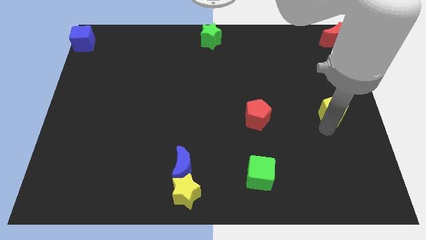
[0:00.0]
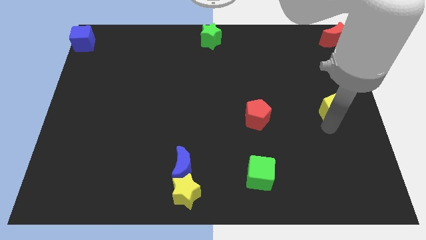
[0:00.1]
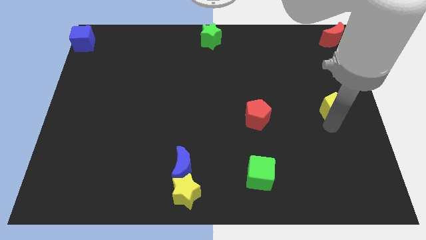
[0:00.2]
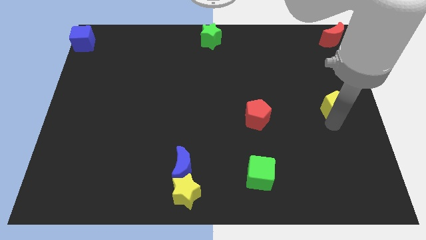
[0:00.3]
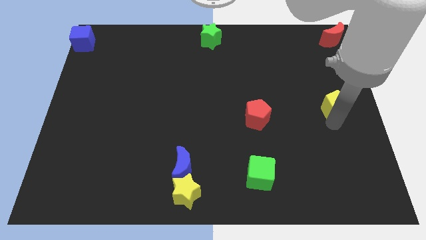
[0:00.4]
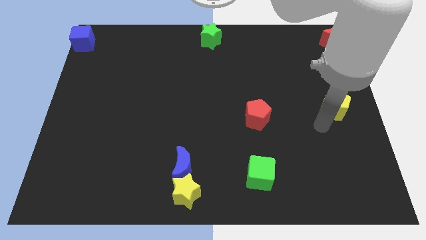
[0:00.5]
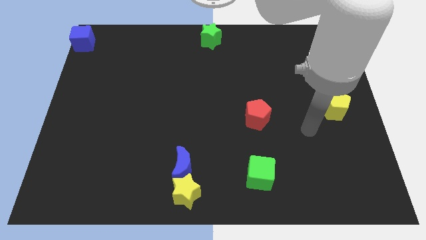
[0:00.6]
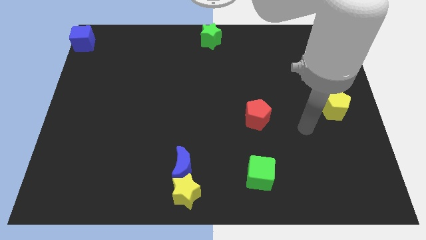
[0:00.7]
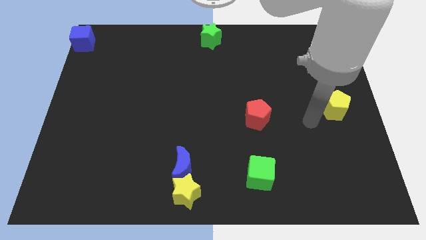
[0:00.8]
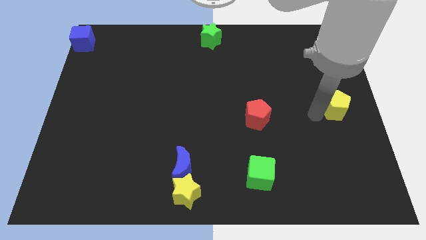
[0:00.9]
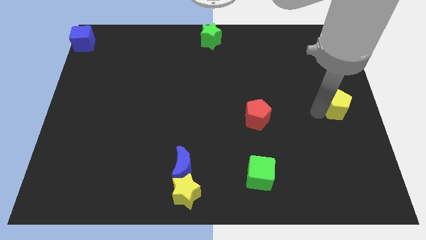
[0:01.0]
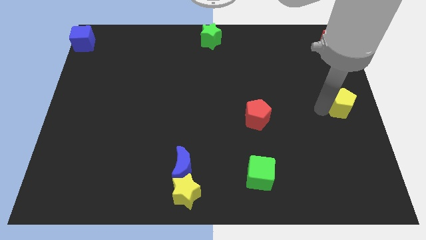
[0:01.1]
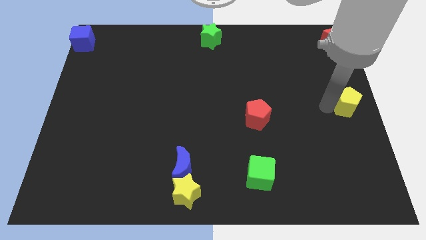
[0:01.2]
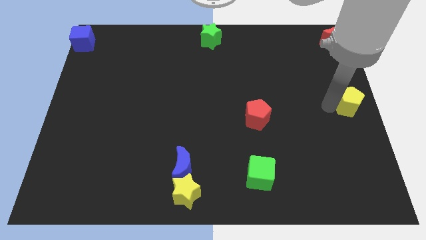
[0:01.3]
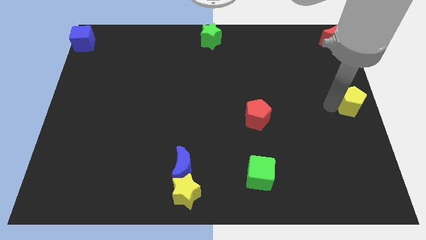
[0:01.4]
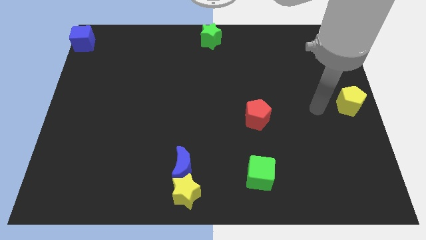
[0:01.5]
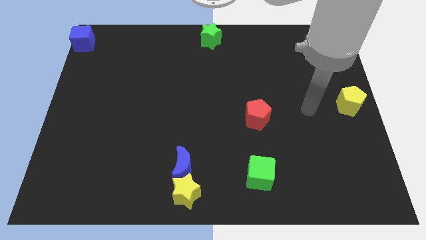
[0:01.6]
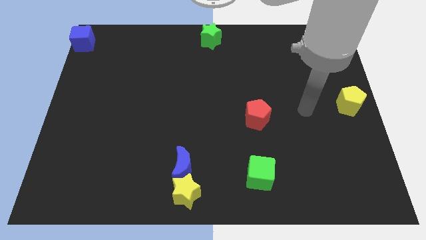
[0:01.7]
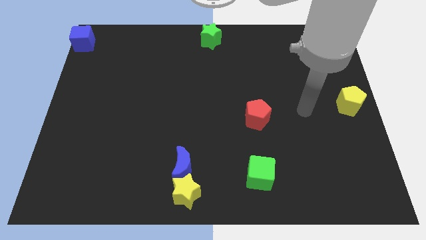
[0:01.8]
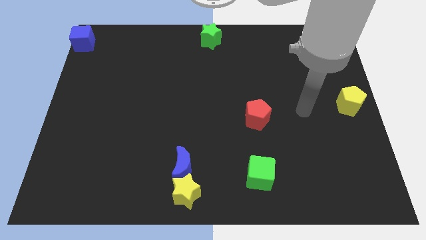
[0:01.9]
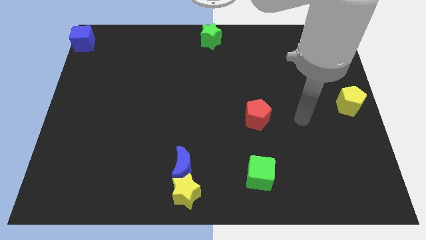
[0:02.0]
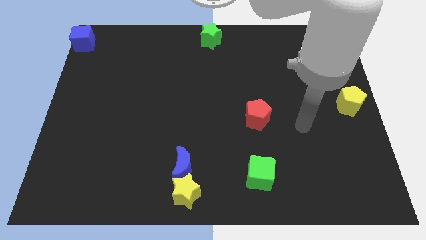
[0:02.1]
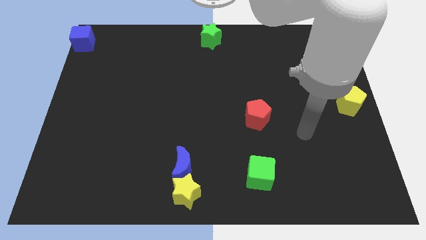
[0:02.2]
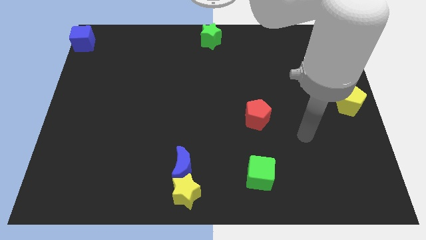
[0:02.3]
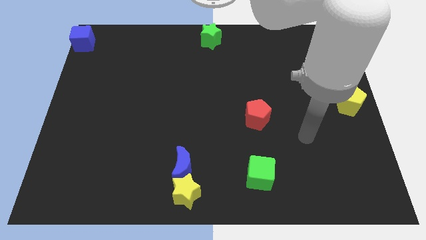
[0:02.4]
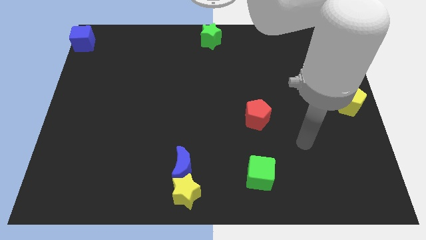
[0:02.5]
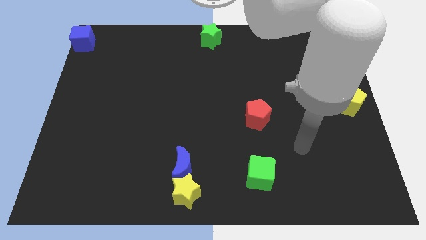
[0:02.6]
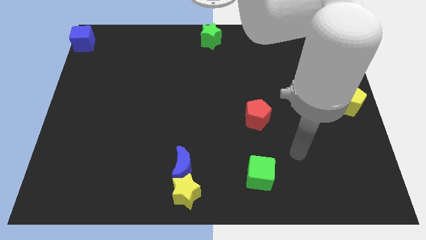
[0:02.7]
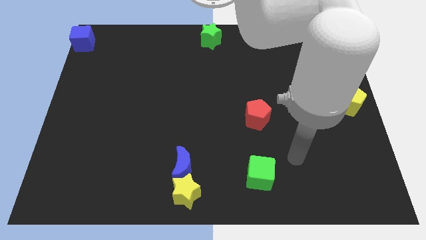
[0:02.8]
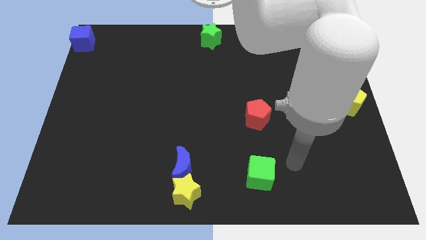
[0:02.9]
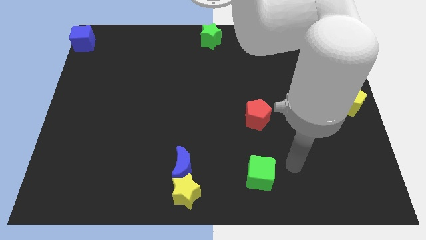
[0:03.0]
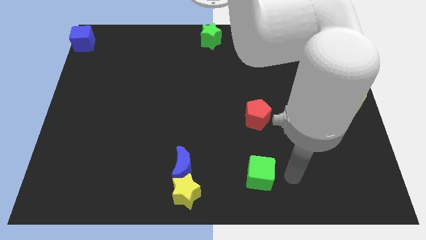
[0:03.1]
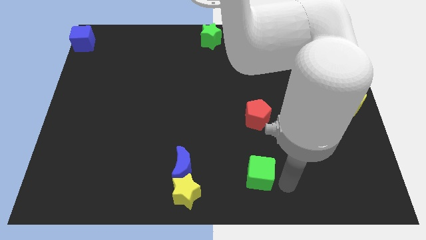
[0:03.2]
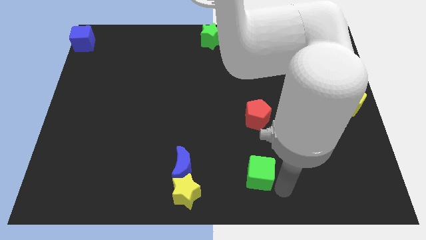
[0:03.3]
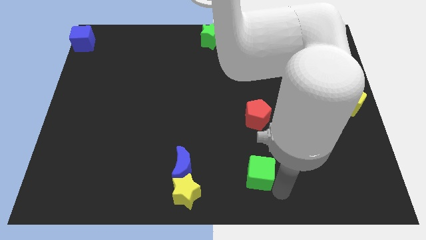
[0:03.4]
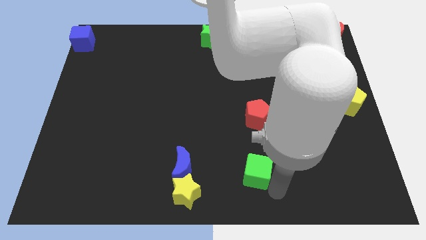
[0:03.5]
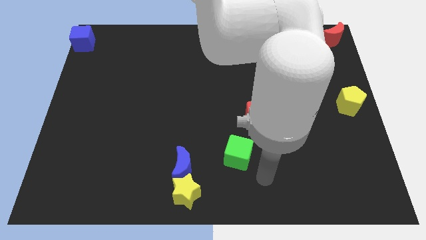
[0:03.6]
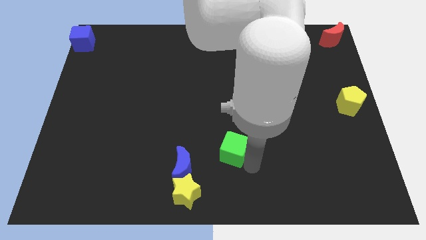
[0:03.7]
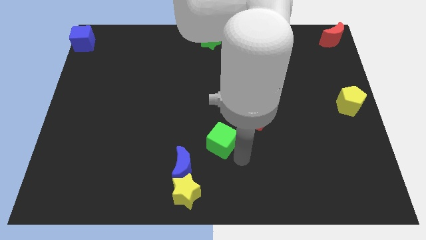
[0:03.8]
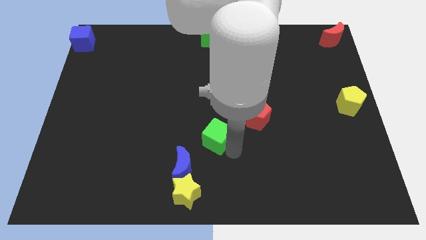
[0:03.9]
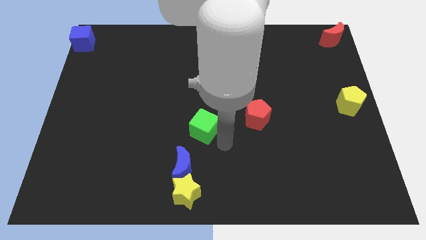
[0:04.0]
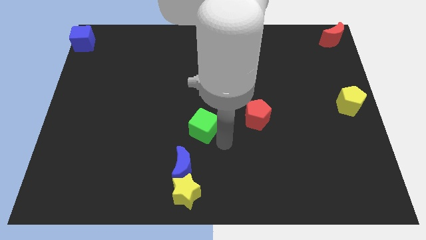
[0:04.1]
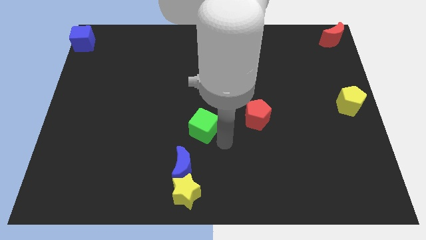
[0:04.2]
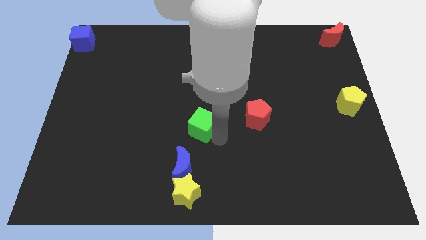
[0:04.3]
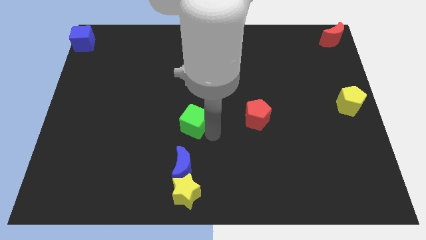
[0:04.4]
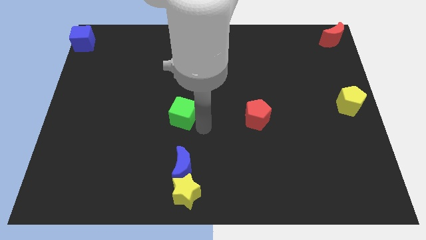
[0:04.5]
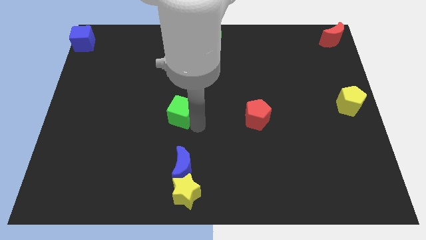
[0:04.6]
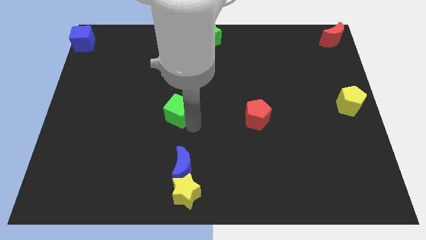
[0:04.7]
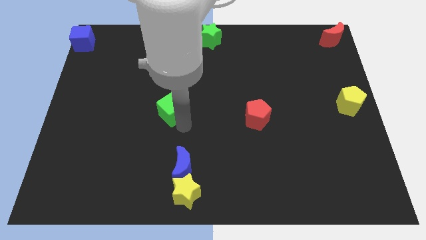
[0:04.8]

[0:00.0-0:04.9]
push the green cube to the left side of the red pentagon

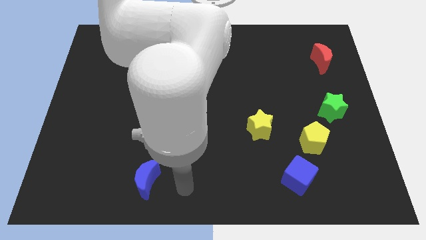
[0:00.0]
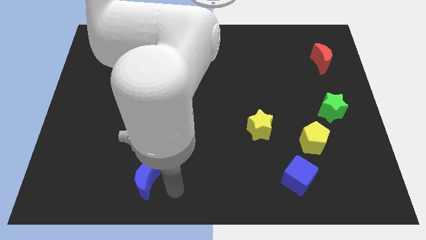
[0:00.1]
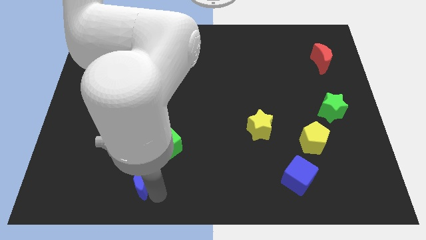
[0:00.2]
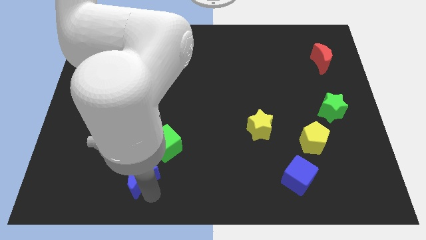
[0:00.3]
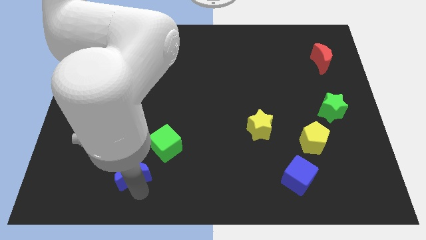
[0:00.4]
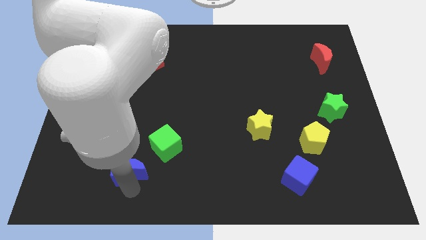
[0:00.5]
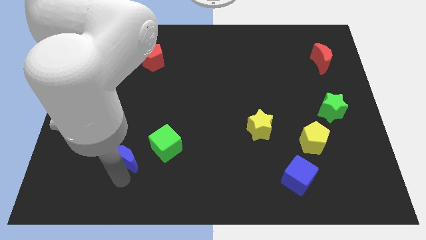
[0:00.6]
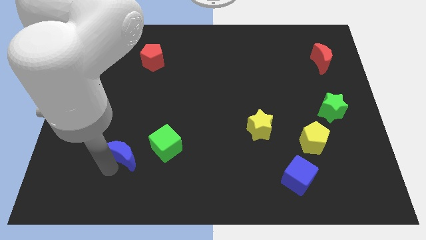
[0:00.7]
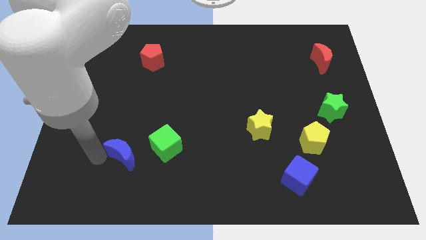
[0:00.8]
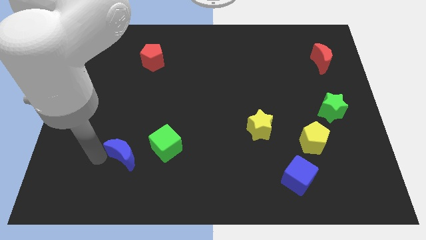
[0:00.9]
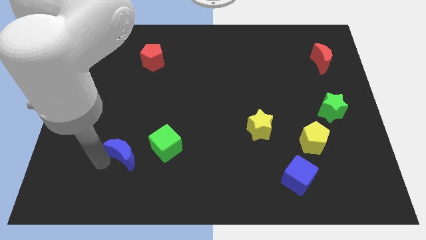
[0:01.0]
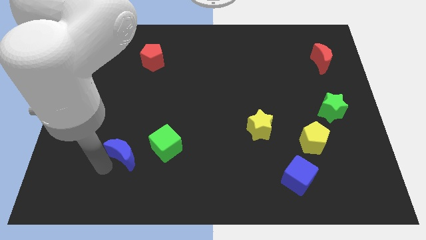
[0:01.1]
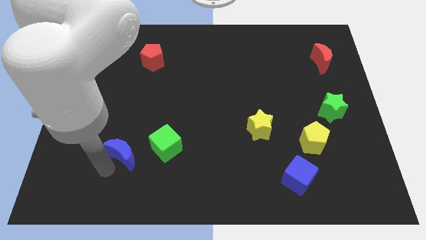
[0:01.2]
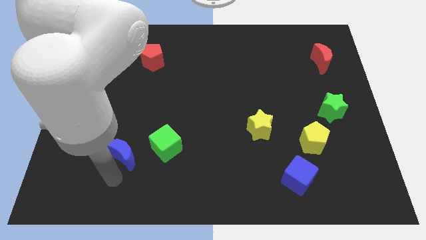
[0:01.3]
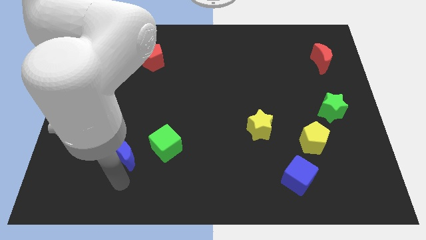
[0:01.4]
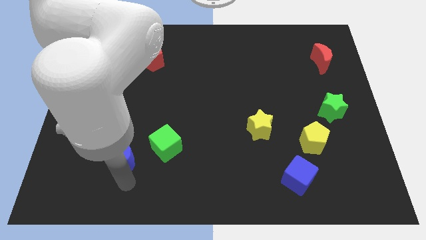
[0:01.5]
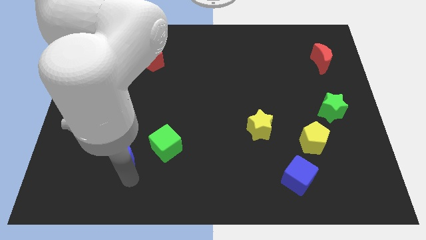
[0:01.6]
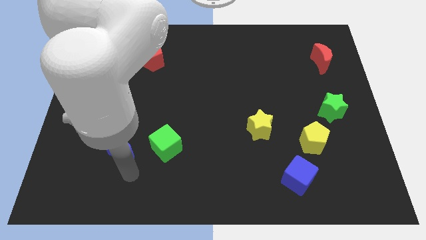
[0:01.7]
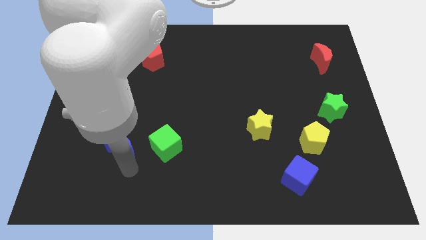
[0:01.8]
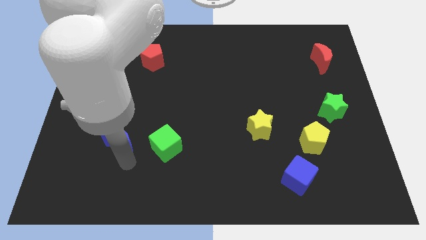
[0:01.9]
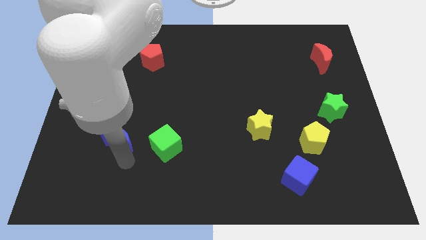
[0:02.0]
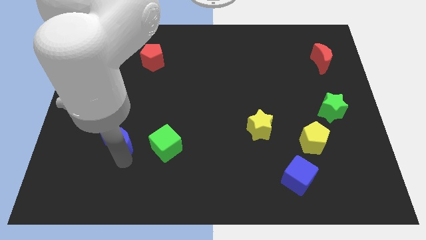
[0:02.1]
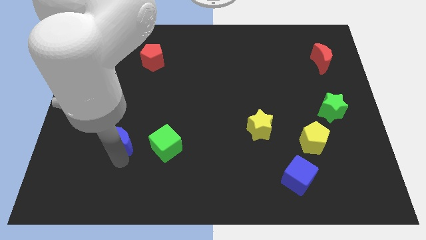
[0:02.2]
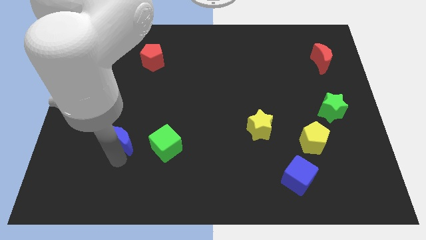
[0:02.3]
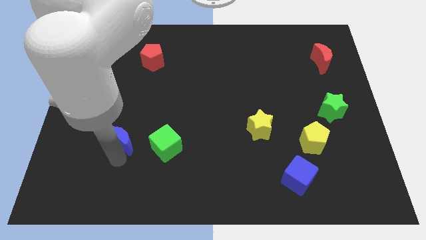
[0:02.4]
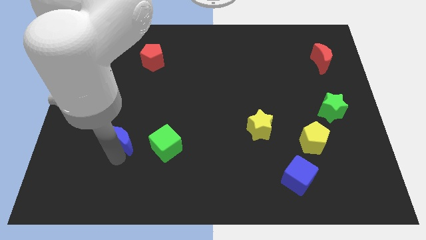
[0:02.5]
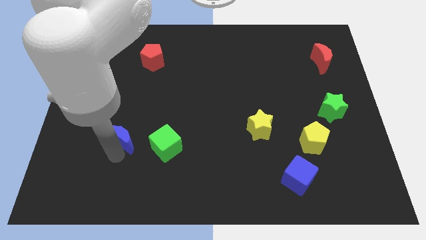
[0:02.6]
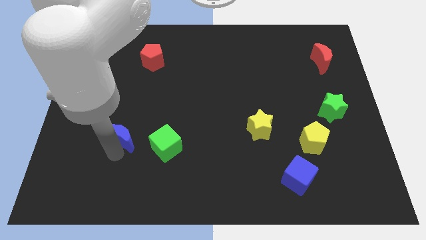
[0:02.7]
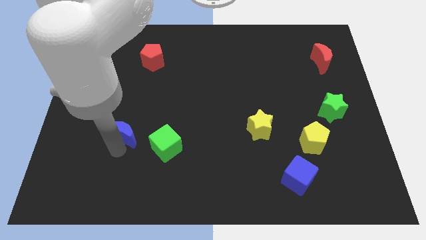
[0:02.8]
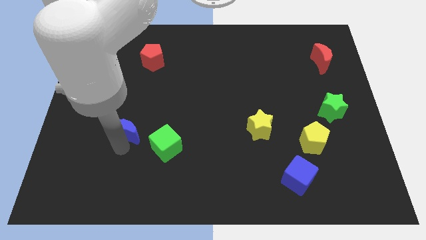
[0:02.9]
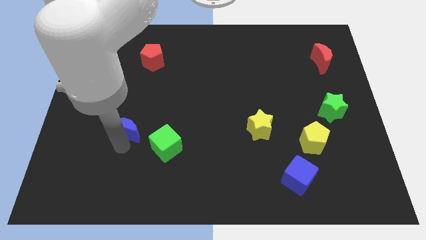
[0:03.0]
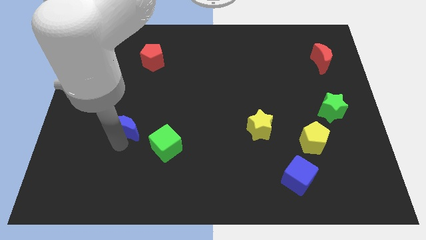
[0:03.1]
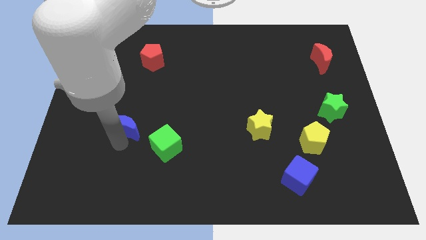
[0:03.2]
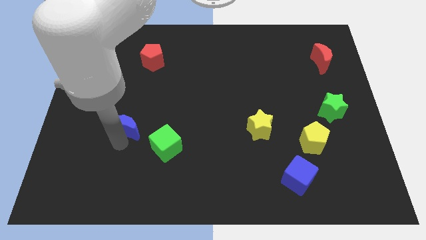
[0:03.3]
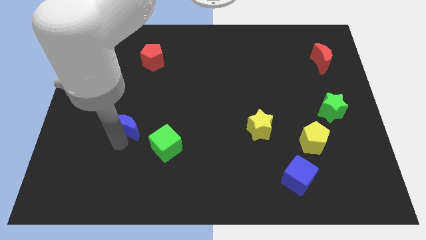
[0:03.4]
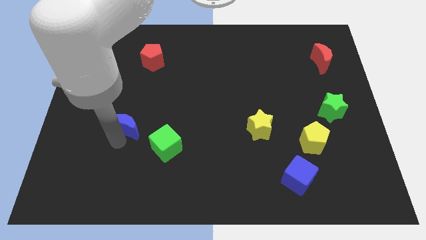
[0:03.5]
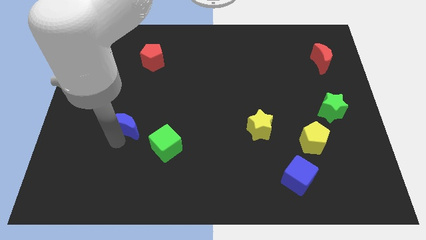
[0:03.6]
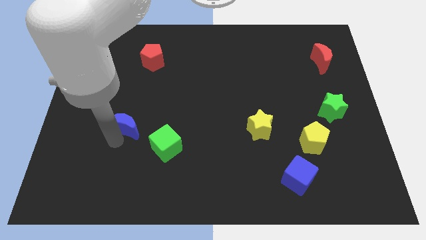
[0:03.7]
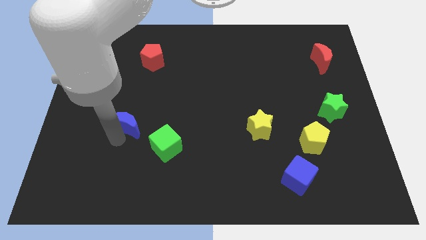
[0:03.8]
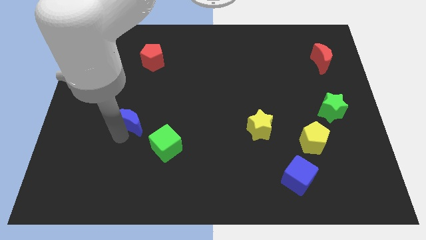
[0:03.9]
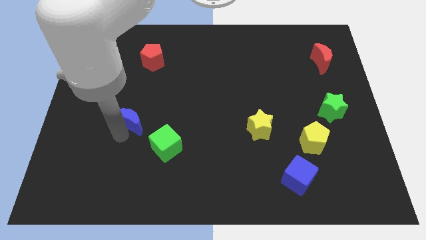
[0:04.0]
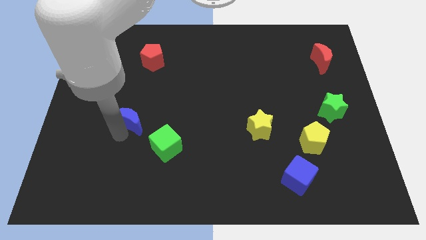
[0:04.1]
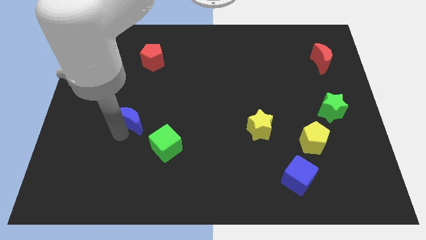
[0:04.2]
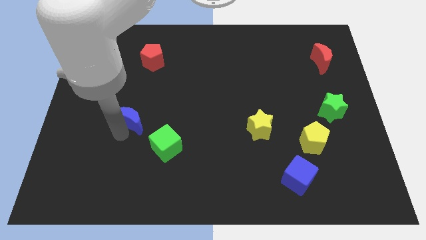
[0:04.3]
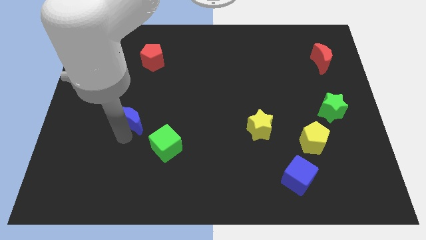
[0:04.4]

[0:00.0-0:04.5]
move the blue crescent diagonally to the top left side of the green cube
